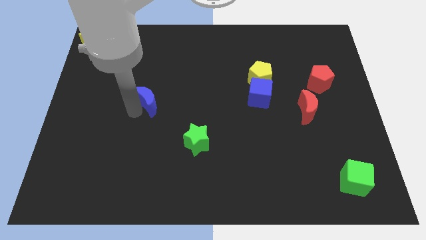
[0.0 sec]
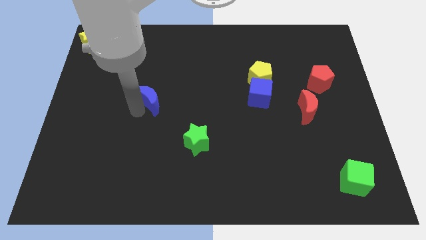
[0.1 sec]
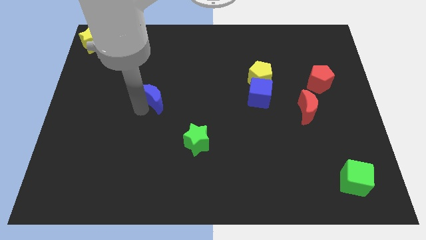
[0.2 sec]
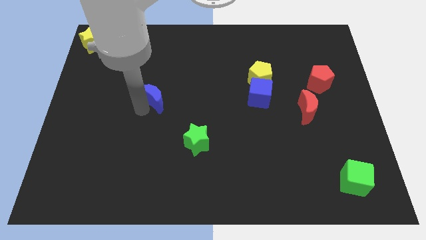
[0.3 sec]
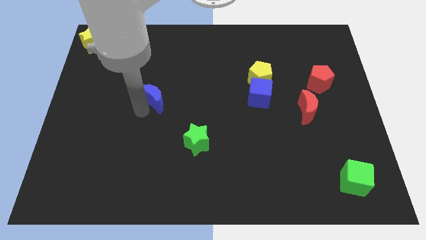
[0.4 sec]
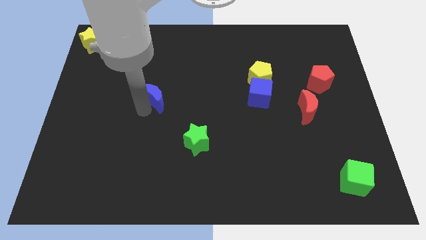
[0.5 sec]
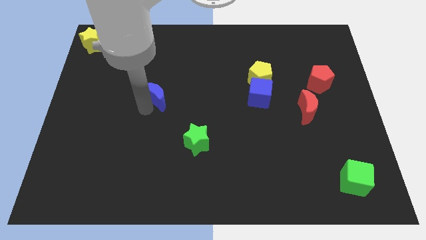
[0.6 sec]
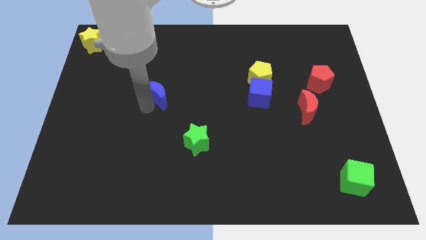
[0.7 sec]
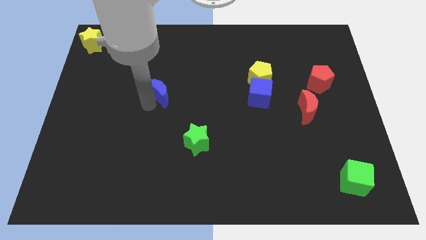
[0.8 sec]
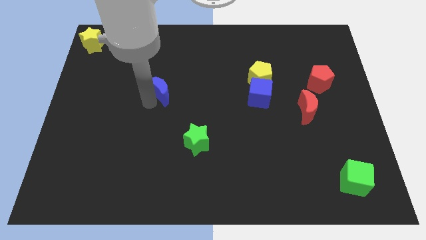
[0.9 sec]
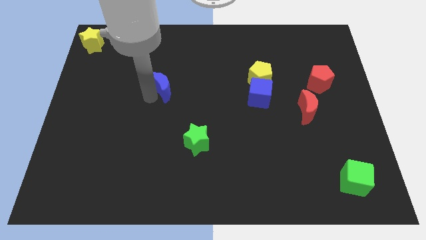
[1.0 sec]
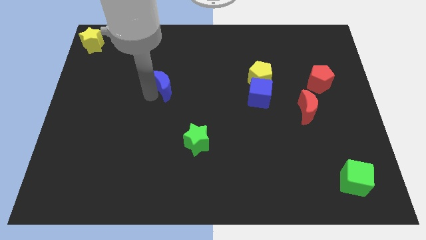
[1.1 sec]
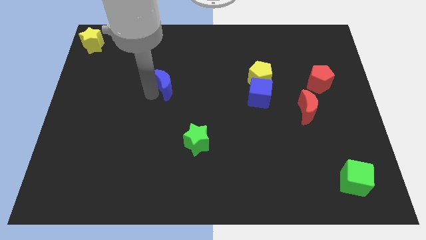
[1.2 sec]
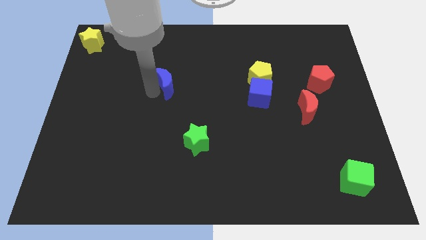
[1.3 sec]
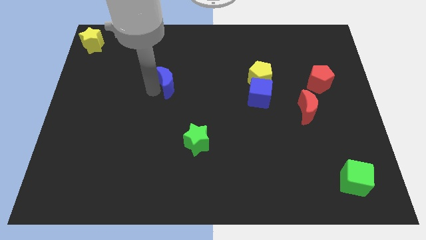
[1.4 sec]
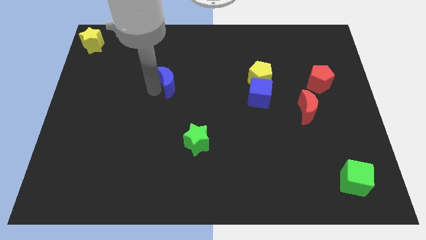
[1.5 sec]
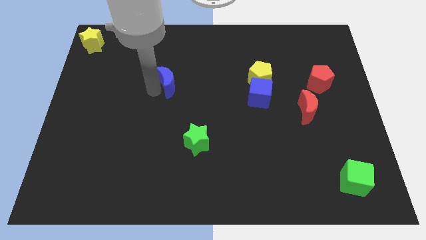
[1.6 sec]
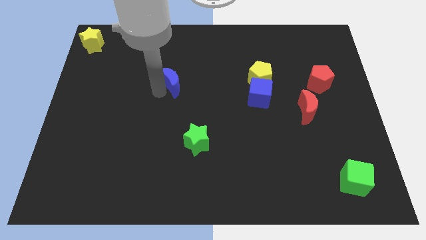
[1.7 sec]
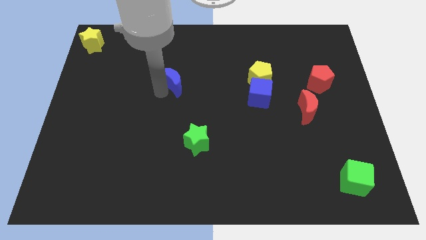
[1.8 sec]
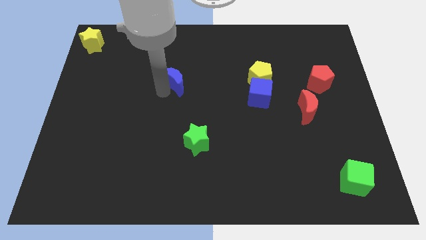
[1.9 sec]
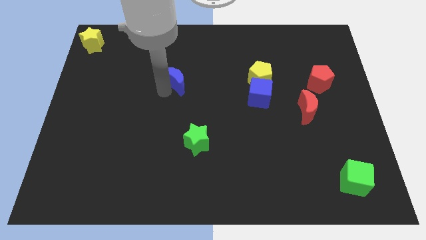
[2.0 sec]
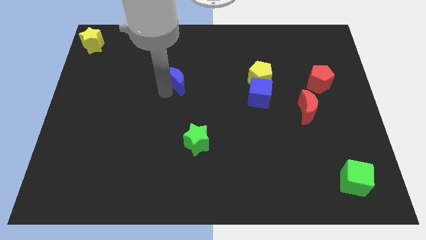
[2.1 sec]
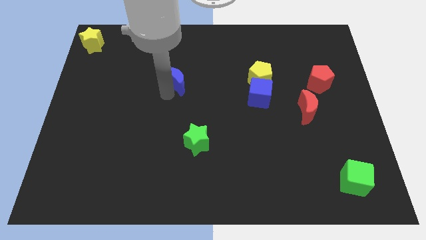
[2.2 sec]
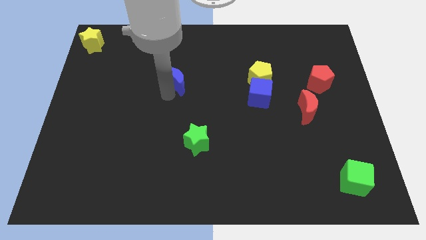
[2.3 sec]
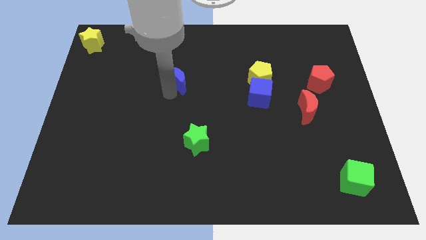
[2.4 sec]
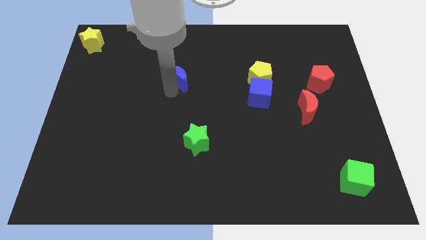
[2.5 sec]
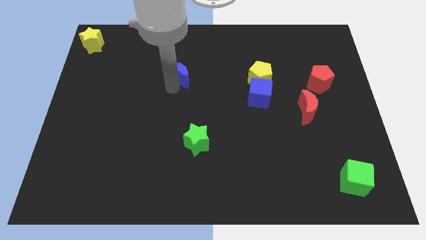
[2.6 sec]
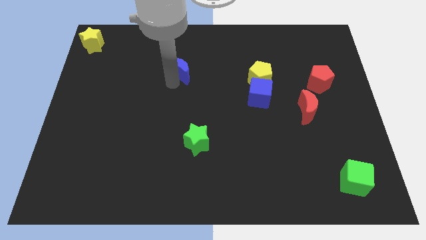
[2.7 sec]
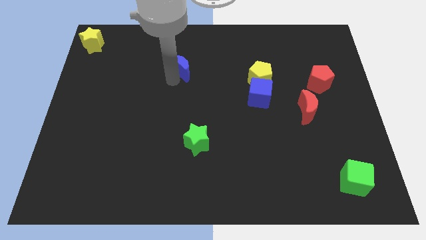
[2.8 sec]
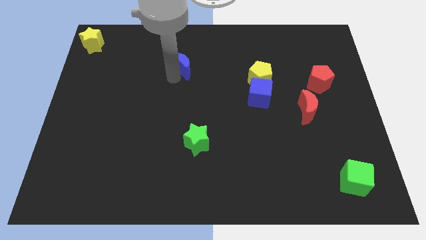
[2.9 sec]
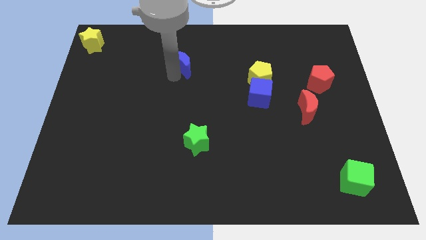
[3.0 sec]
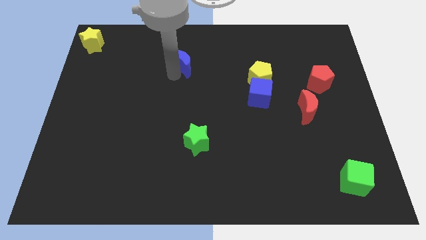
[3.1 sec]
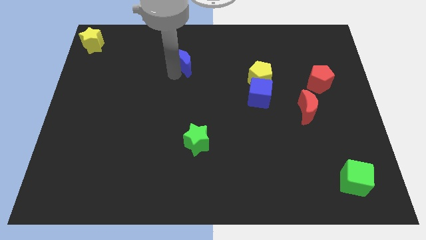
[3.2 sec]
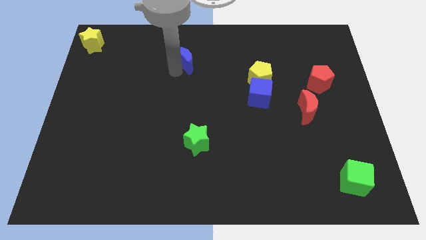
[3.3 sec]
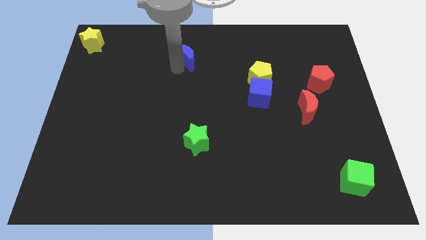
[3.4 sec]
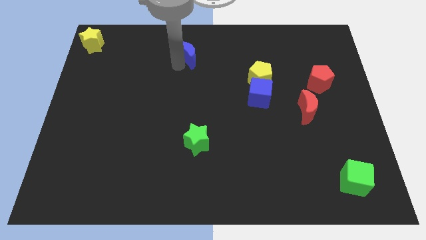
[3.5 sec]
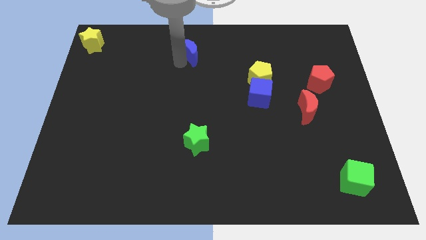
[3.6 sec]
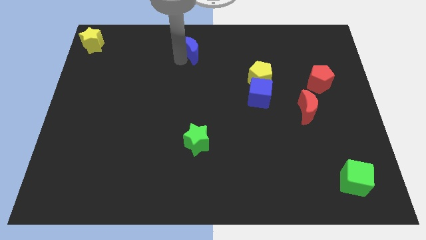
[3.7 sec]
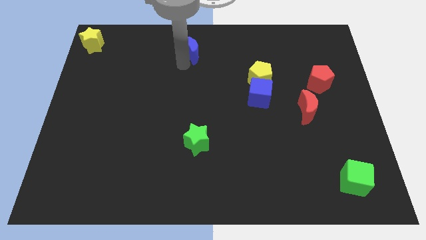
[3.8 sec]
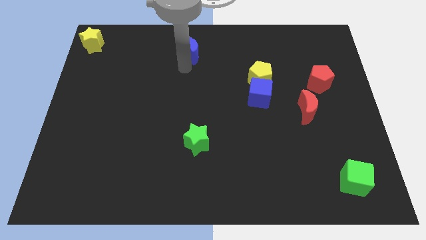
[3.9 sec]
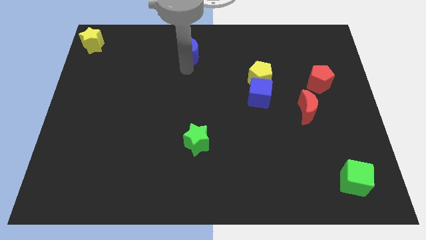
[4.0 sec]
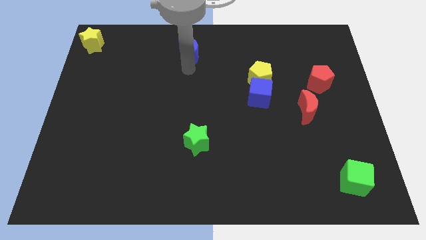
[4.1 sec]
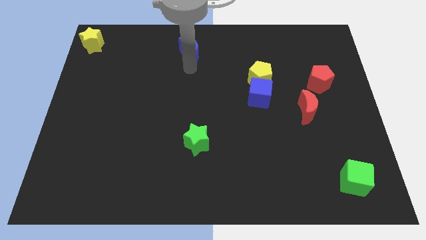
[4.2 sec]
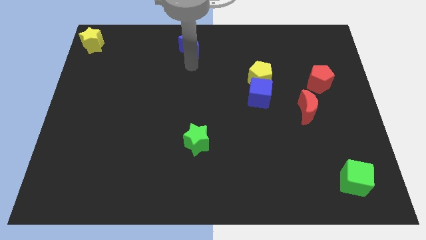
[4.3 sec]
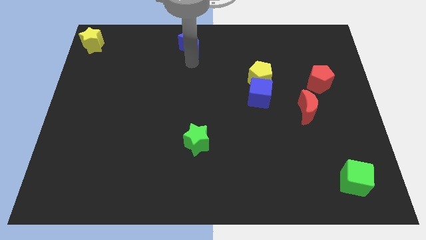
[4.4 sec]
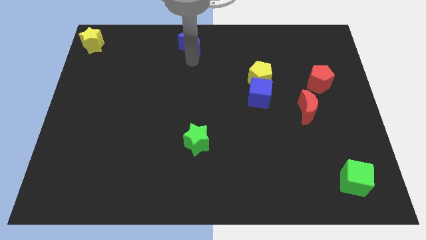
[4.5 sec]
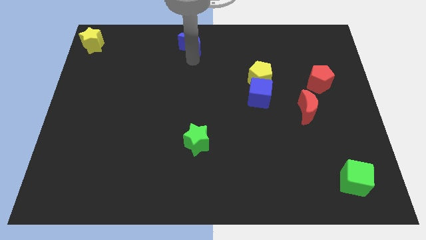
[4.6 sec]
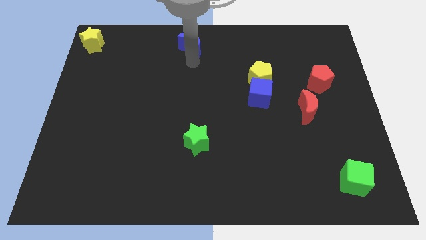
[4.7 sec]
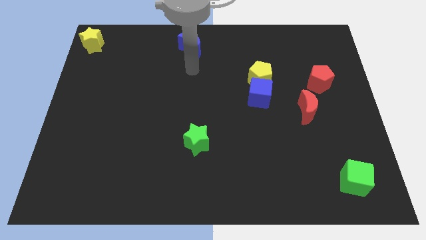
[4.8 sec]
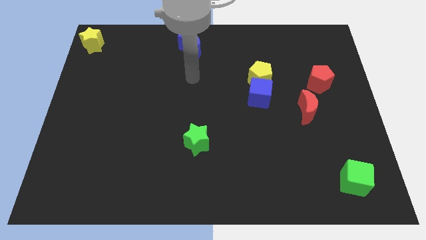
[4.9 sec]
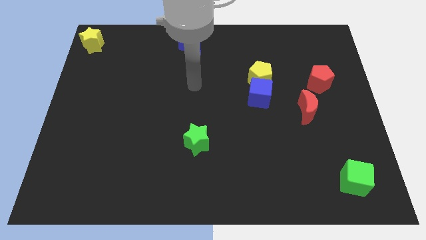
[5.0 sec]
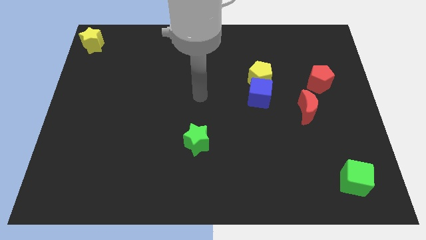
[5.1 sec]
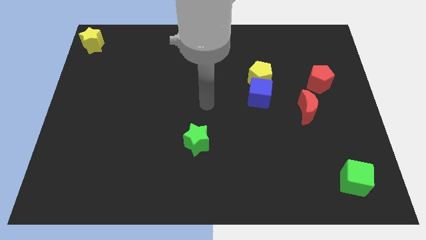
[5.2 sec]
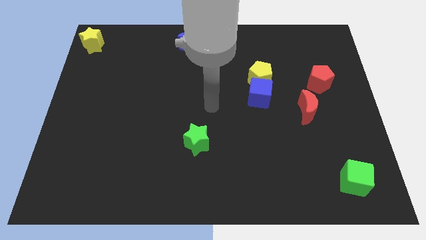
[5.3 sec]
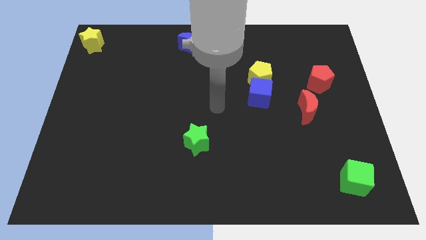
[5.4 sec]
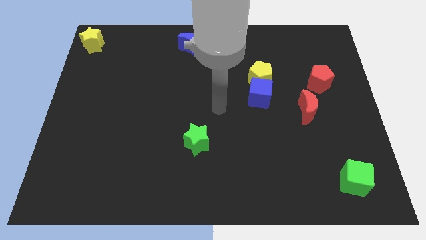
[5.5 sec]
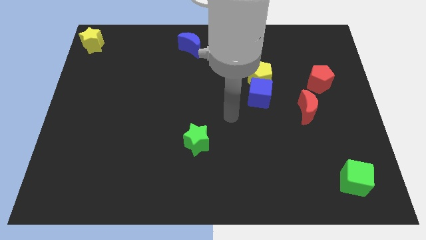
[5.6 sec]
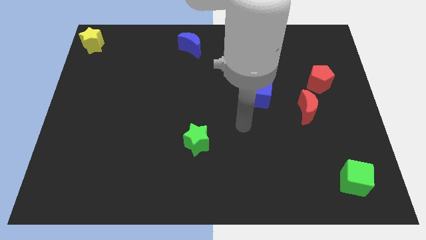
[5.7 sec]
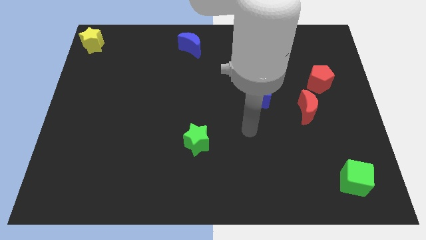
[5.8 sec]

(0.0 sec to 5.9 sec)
move the blue crescent to the top center of the board

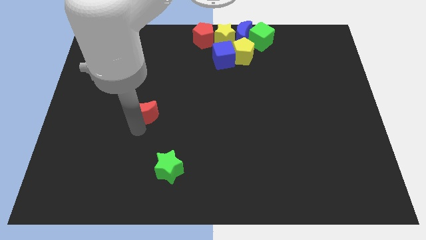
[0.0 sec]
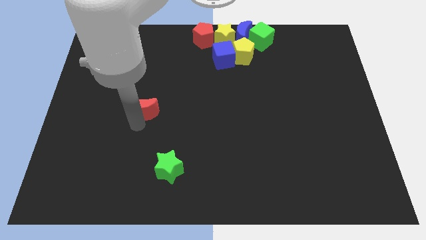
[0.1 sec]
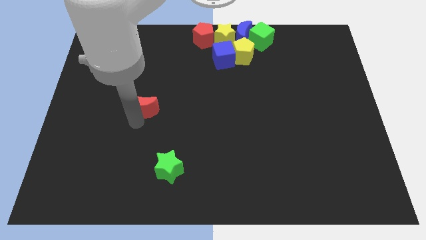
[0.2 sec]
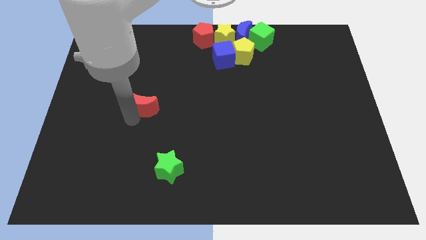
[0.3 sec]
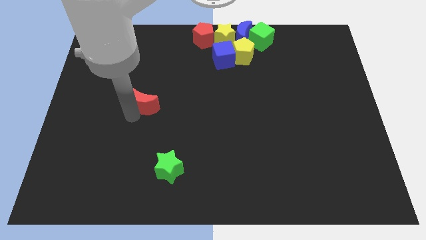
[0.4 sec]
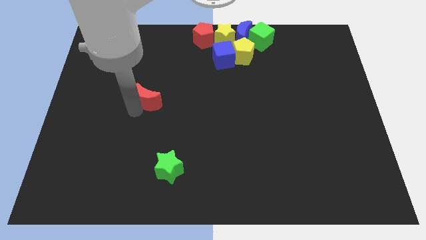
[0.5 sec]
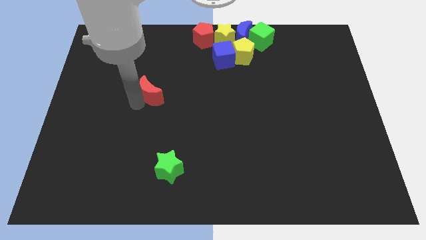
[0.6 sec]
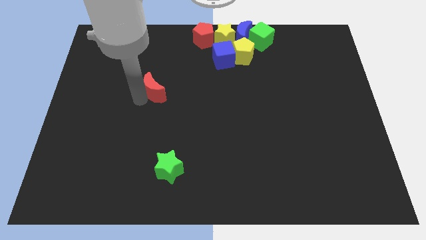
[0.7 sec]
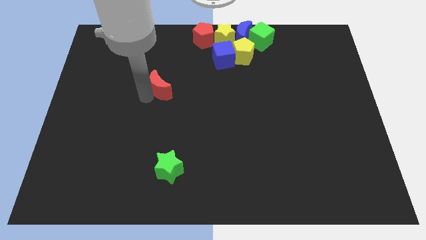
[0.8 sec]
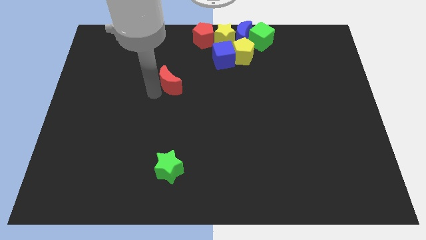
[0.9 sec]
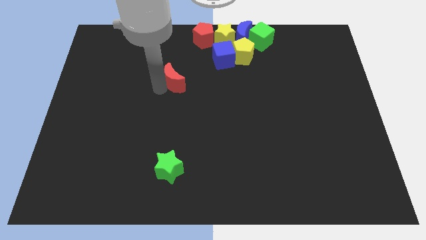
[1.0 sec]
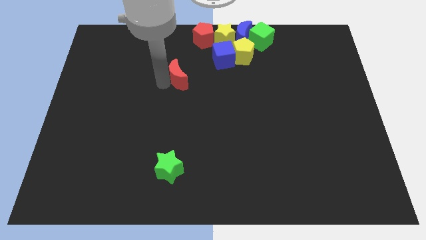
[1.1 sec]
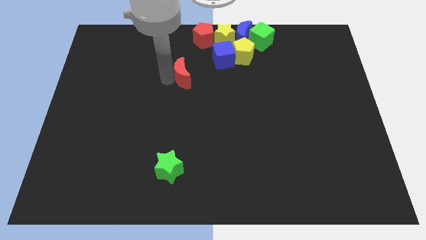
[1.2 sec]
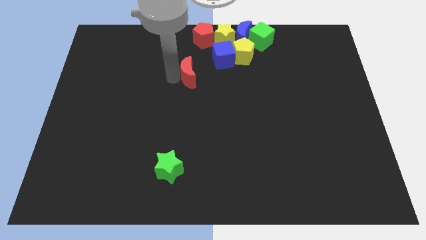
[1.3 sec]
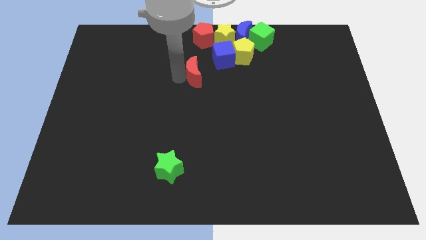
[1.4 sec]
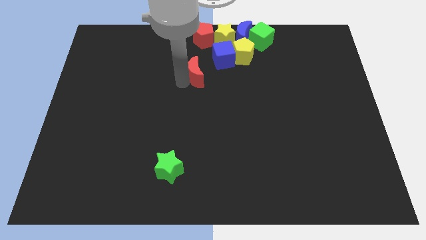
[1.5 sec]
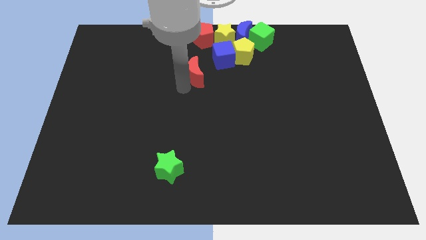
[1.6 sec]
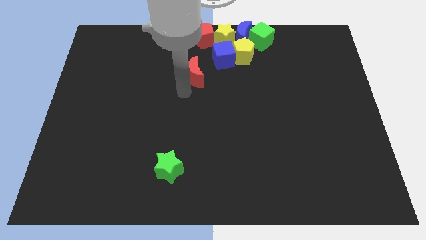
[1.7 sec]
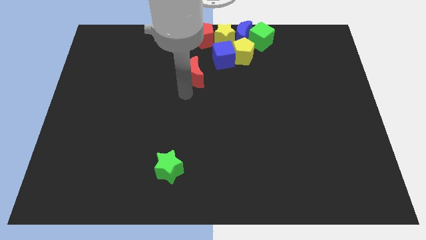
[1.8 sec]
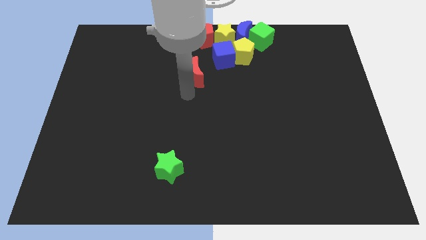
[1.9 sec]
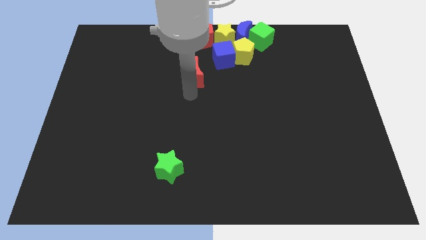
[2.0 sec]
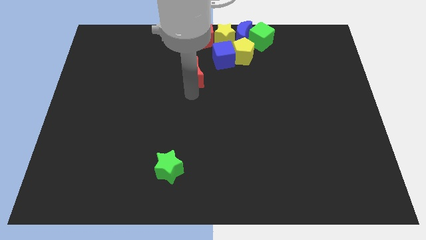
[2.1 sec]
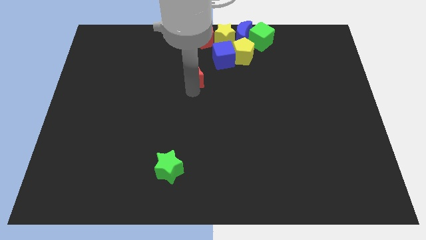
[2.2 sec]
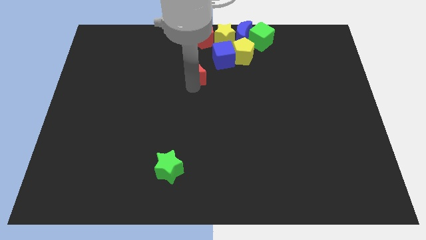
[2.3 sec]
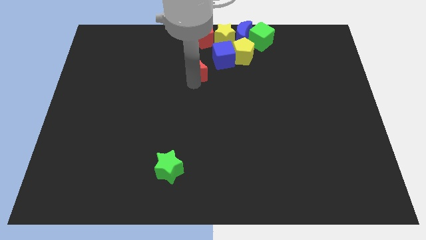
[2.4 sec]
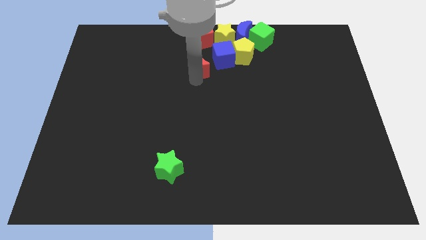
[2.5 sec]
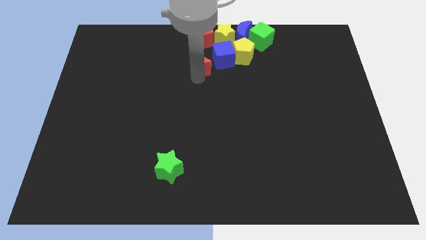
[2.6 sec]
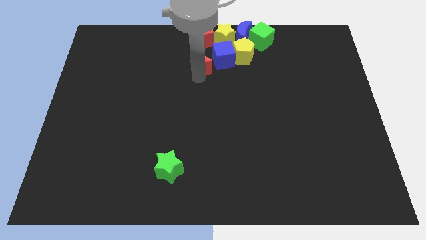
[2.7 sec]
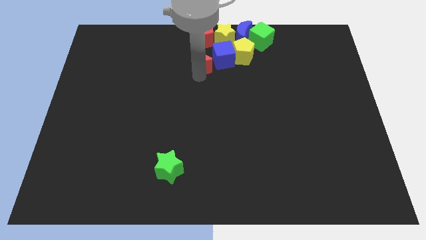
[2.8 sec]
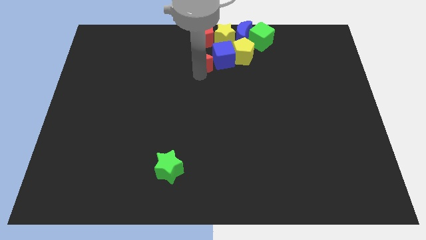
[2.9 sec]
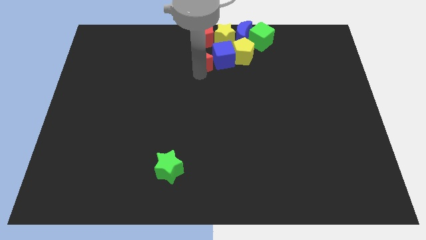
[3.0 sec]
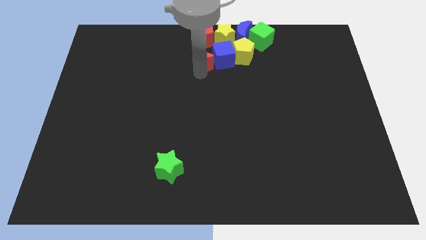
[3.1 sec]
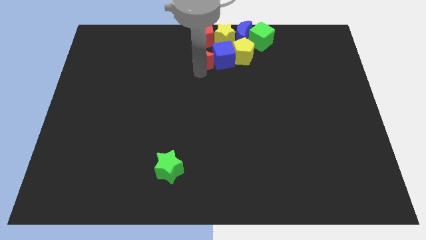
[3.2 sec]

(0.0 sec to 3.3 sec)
push the red crescent left to the blue cube
